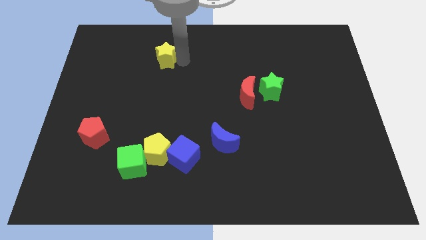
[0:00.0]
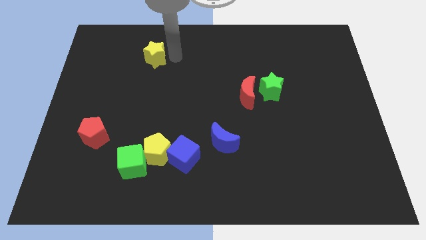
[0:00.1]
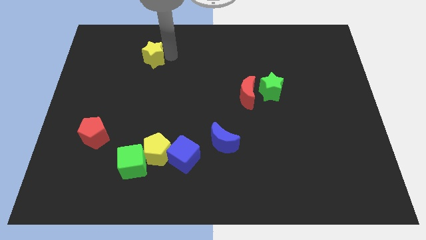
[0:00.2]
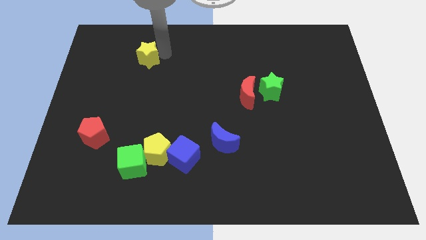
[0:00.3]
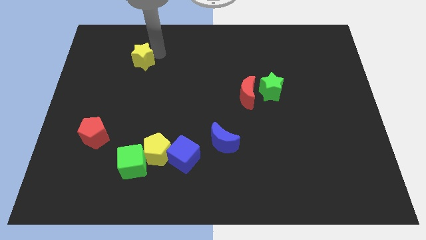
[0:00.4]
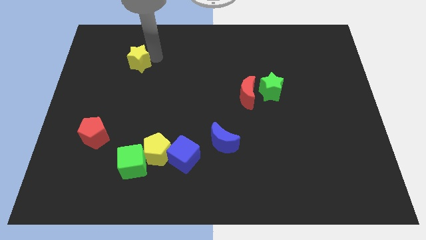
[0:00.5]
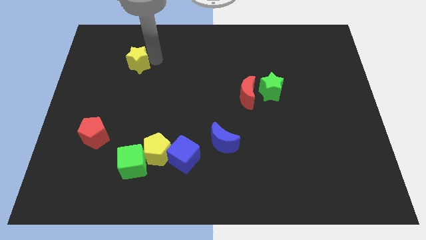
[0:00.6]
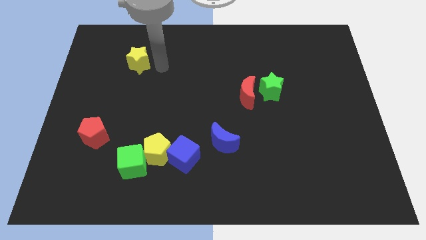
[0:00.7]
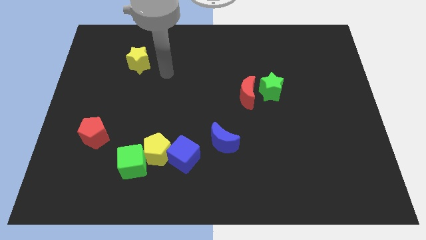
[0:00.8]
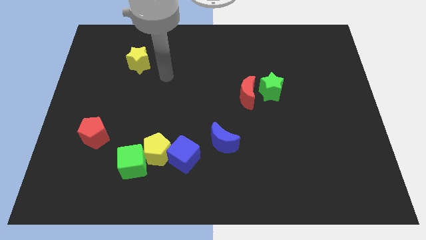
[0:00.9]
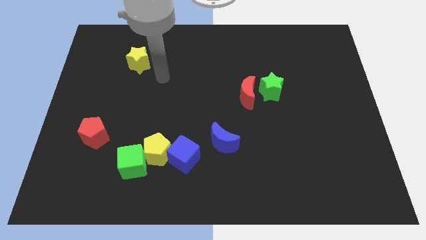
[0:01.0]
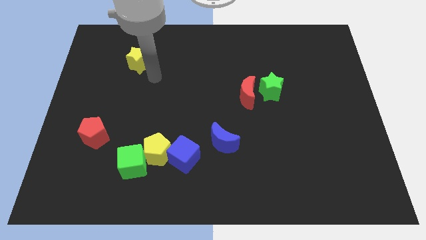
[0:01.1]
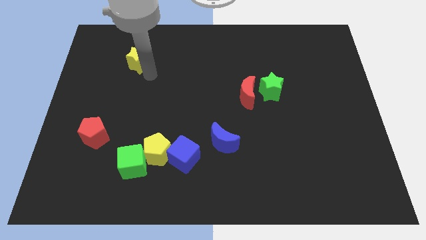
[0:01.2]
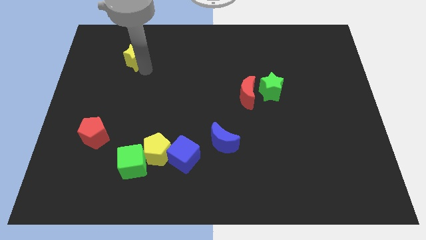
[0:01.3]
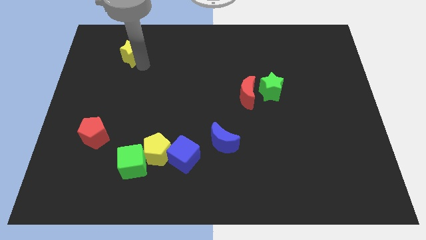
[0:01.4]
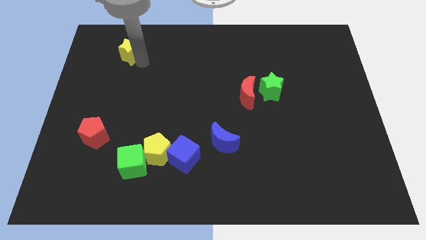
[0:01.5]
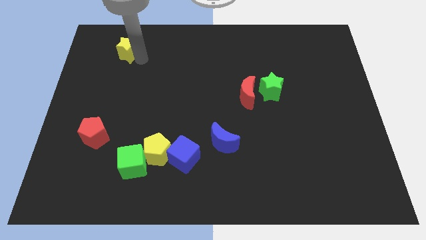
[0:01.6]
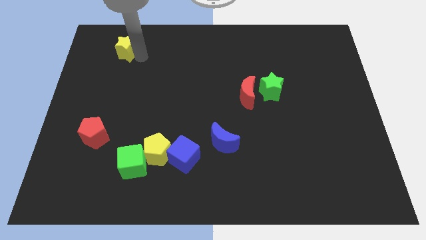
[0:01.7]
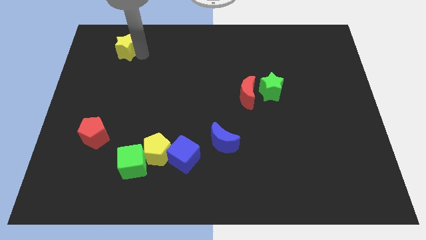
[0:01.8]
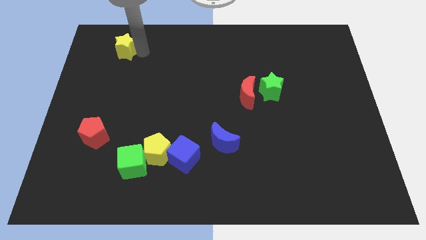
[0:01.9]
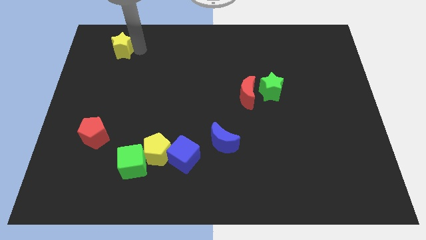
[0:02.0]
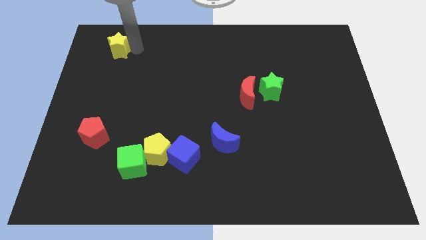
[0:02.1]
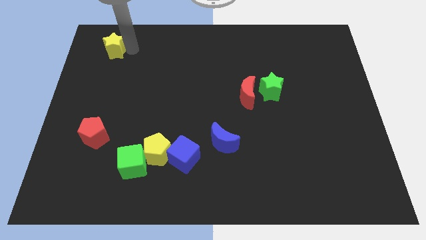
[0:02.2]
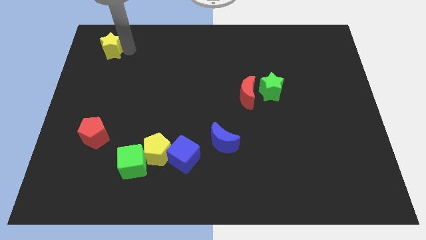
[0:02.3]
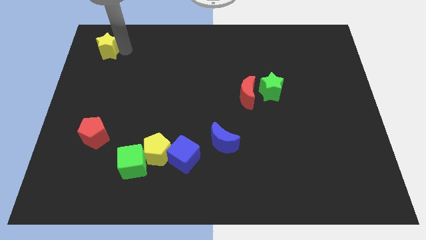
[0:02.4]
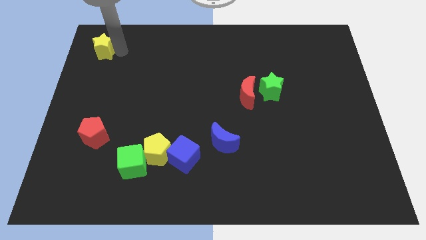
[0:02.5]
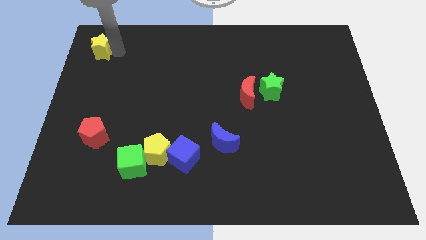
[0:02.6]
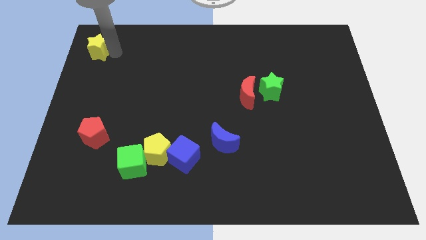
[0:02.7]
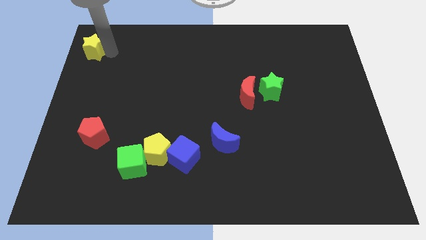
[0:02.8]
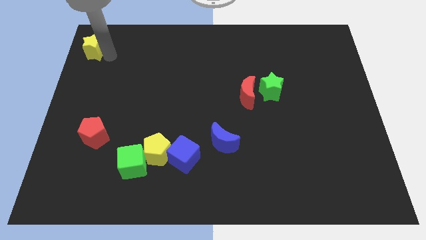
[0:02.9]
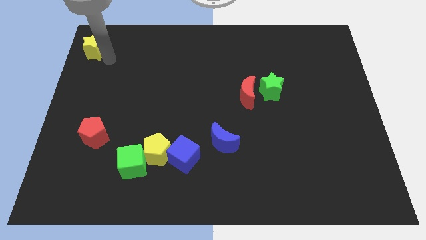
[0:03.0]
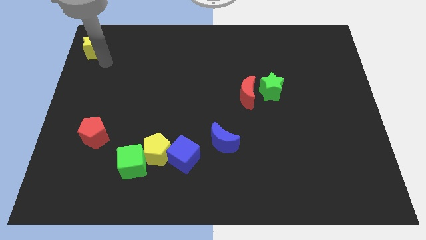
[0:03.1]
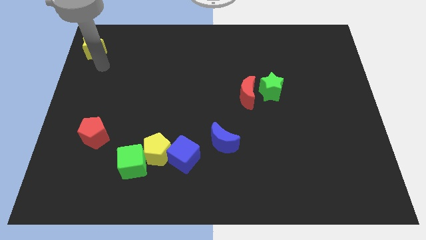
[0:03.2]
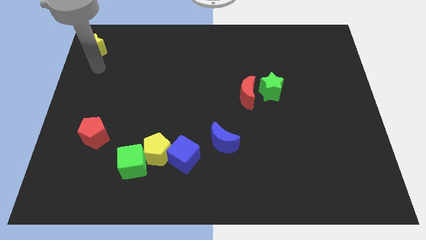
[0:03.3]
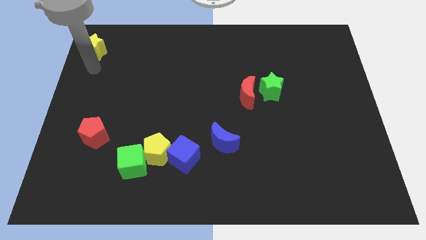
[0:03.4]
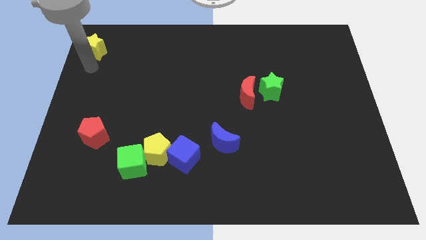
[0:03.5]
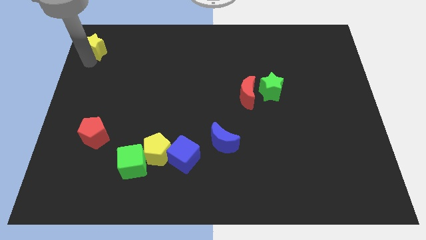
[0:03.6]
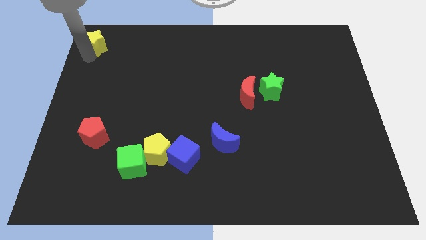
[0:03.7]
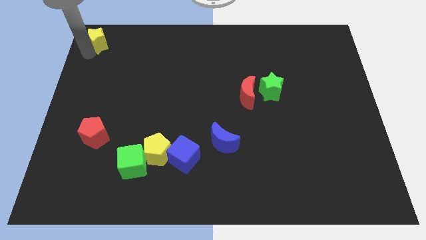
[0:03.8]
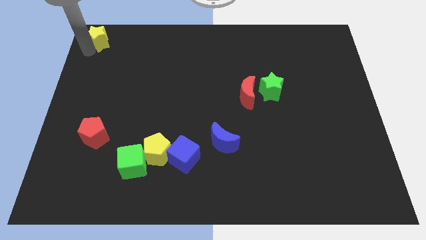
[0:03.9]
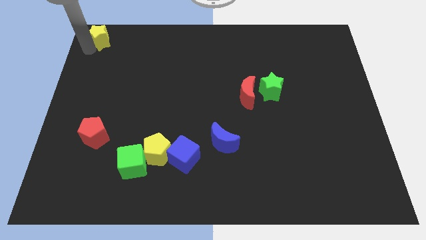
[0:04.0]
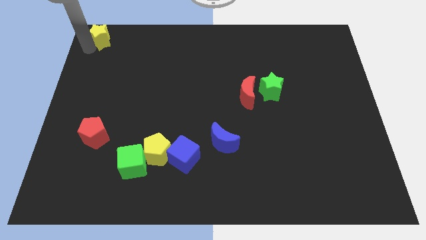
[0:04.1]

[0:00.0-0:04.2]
move the yellow star to the top left to the board

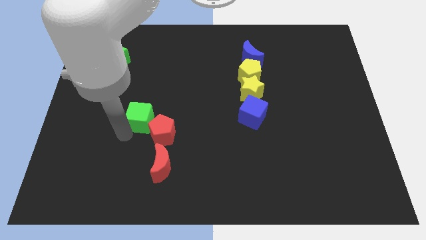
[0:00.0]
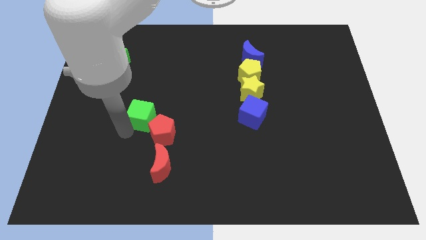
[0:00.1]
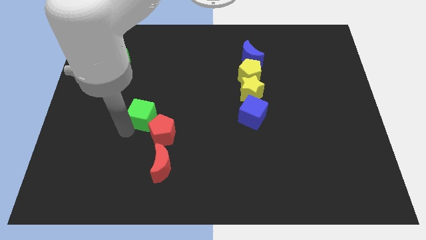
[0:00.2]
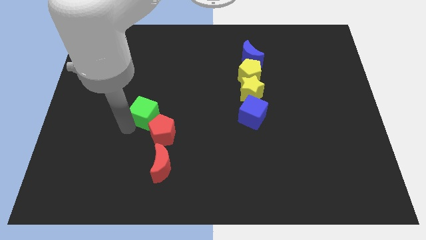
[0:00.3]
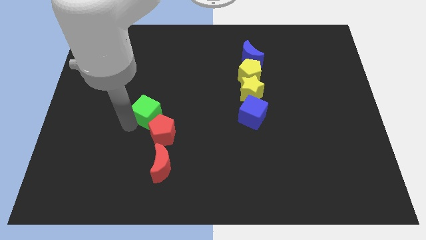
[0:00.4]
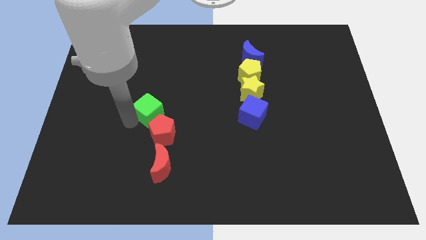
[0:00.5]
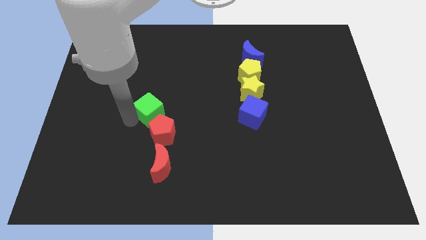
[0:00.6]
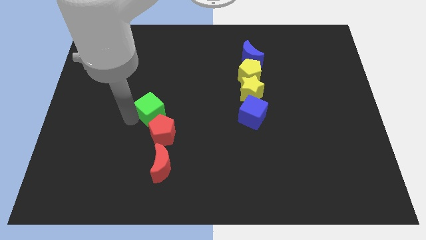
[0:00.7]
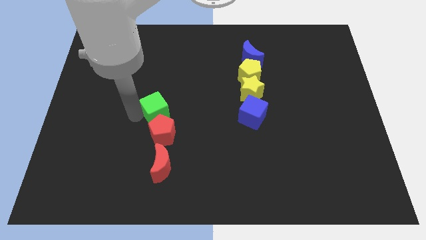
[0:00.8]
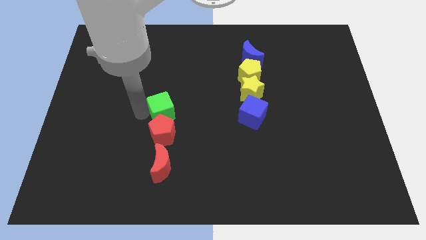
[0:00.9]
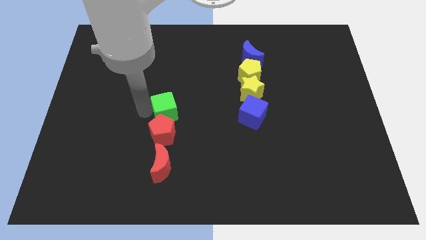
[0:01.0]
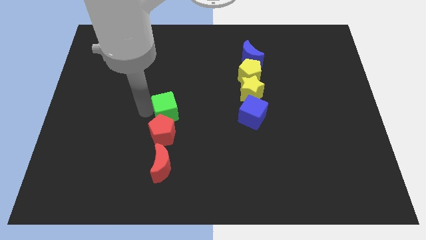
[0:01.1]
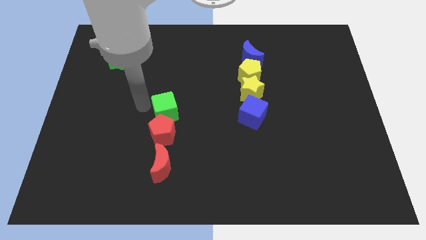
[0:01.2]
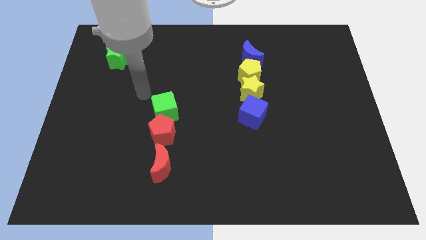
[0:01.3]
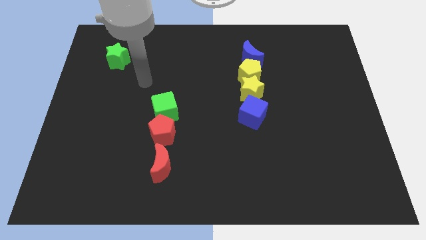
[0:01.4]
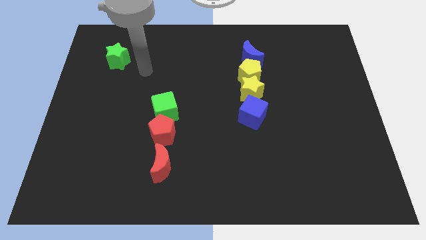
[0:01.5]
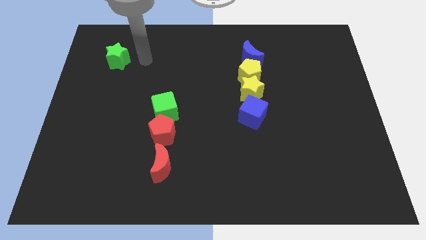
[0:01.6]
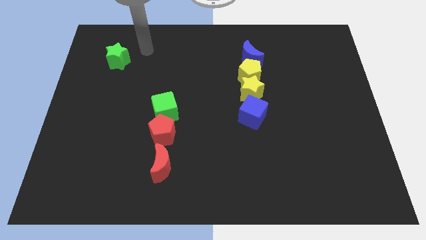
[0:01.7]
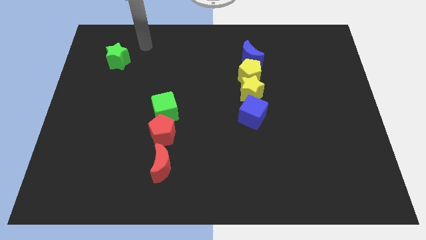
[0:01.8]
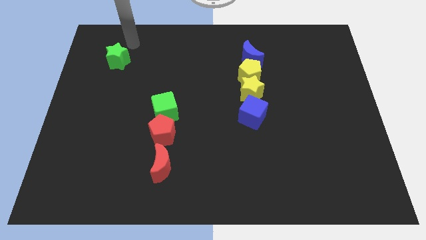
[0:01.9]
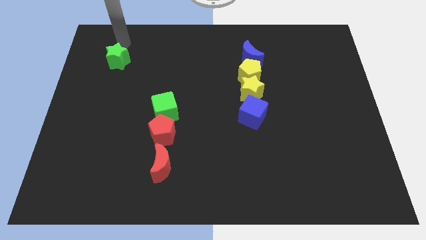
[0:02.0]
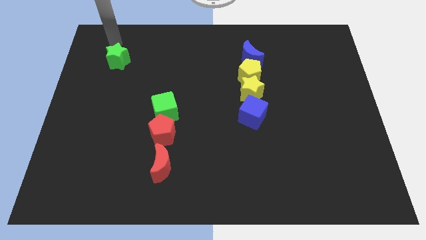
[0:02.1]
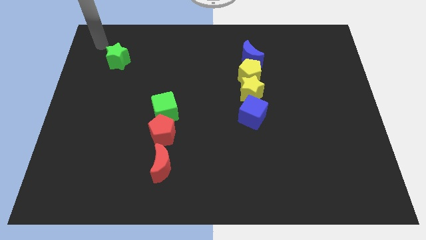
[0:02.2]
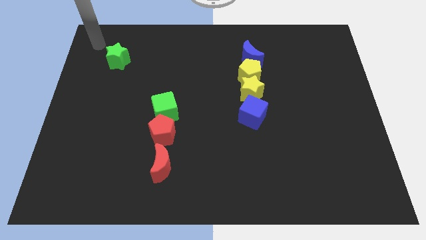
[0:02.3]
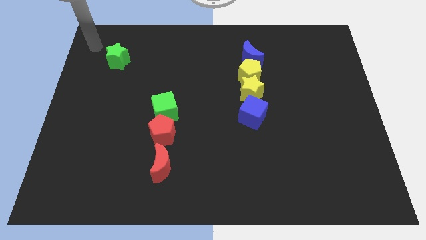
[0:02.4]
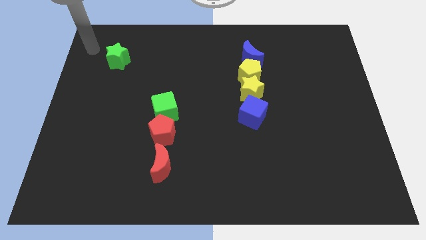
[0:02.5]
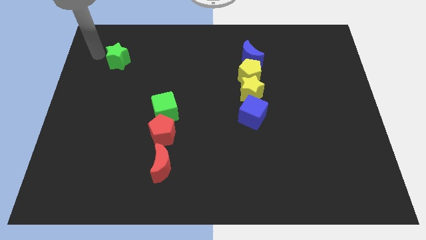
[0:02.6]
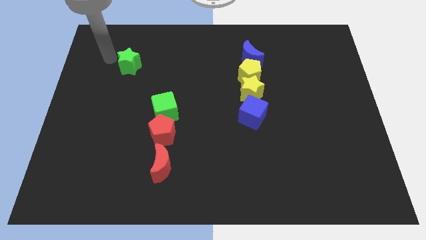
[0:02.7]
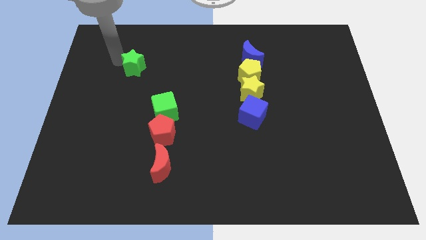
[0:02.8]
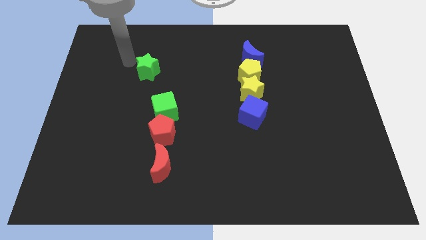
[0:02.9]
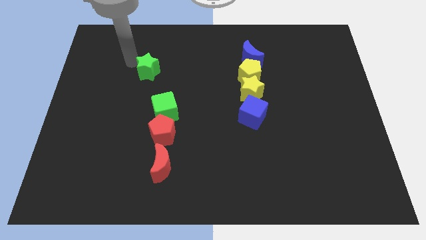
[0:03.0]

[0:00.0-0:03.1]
move the green star towards the green cube

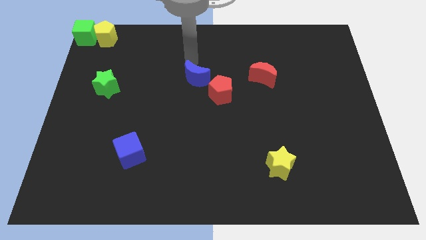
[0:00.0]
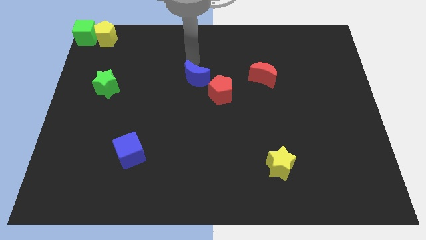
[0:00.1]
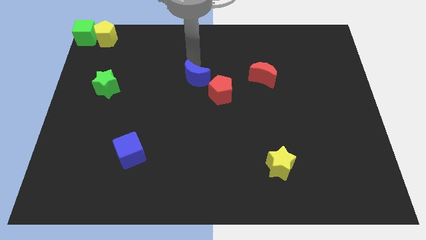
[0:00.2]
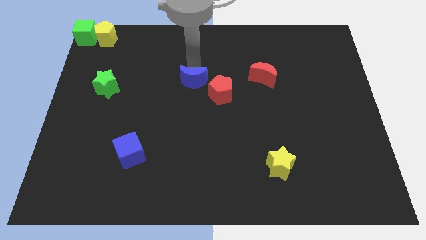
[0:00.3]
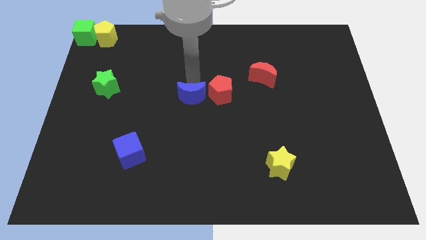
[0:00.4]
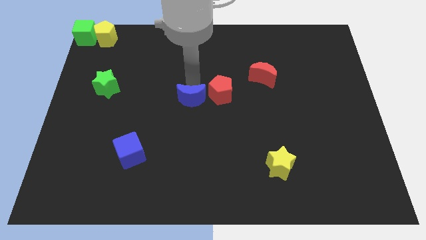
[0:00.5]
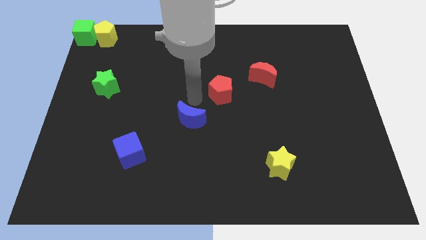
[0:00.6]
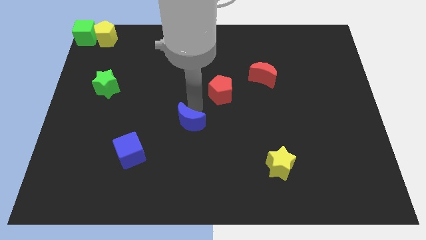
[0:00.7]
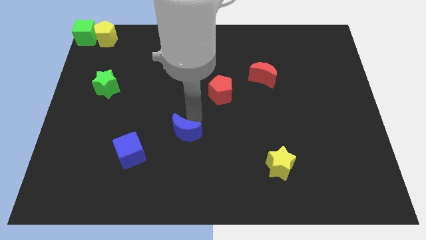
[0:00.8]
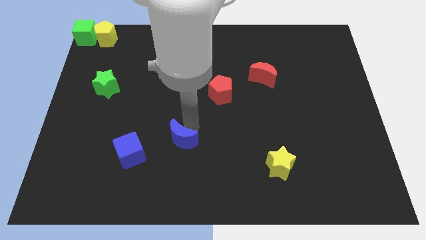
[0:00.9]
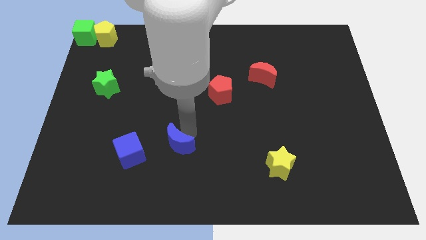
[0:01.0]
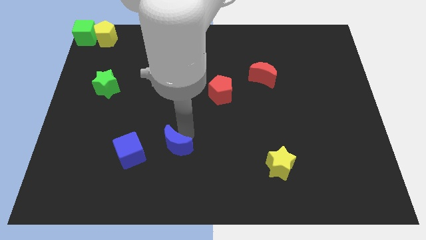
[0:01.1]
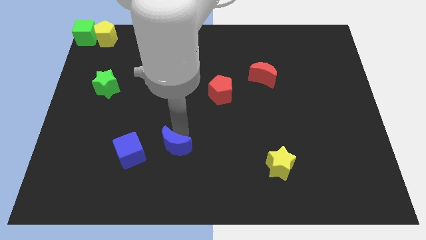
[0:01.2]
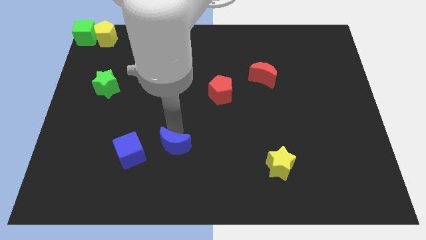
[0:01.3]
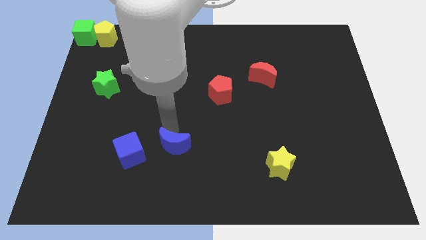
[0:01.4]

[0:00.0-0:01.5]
put the blue crescent to the right of the blue cube
